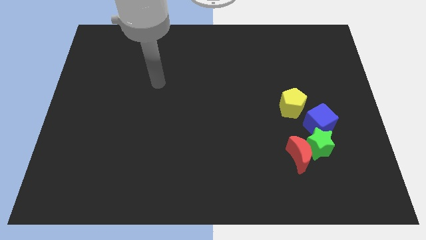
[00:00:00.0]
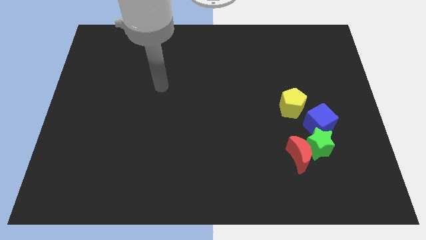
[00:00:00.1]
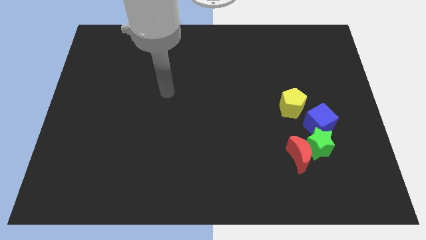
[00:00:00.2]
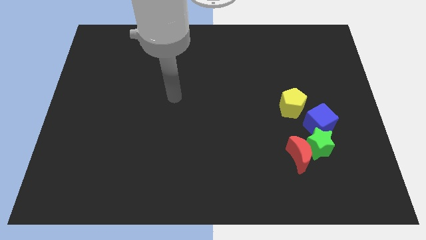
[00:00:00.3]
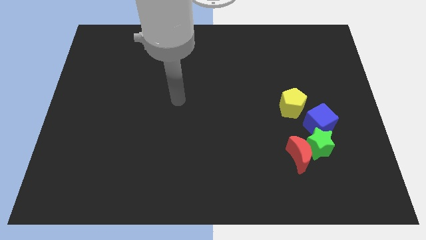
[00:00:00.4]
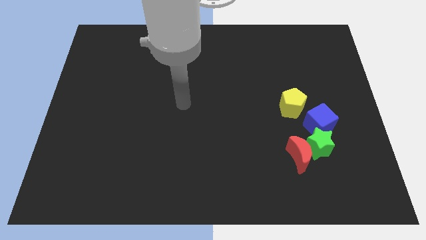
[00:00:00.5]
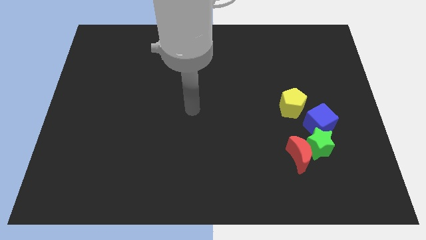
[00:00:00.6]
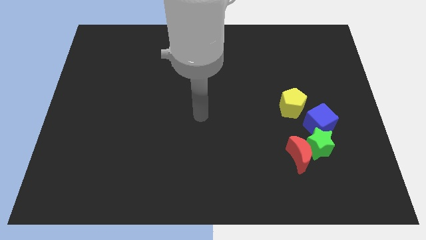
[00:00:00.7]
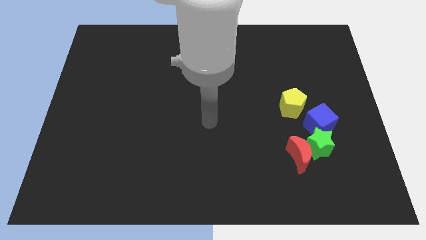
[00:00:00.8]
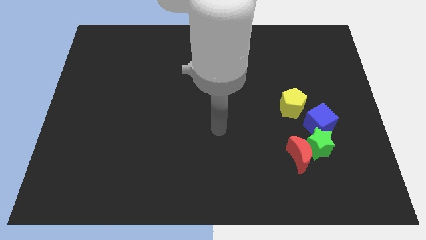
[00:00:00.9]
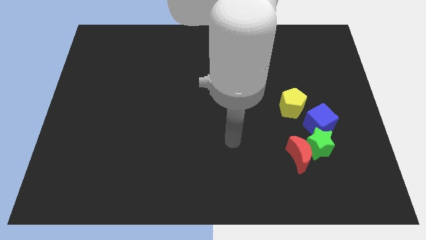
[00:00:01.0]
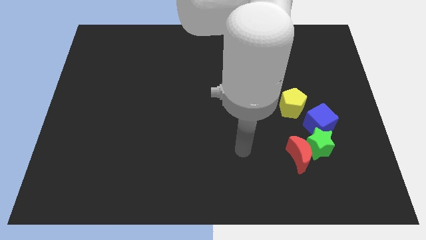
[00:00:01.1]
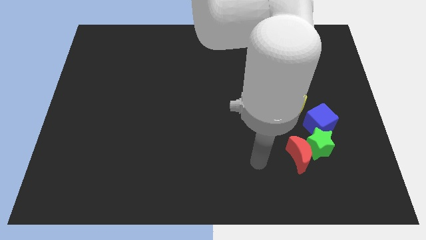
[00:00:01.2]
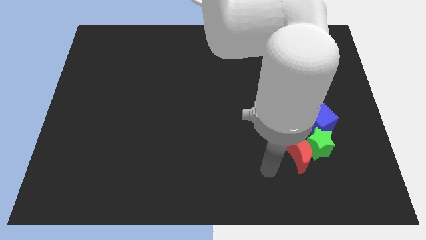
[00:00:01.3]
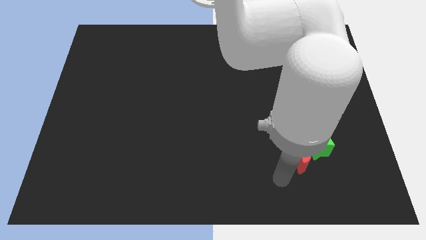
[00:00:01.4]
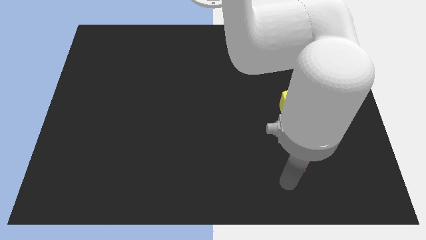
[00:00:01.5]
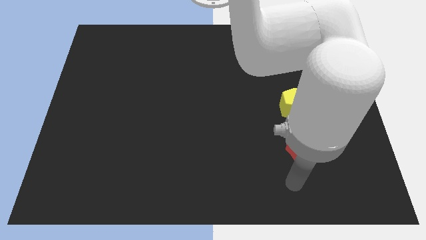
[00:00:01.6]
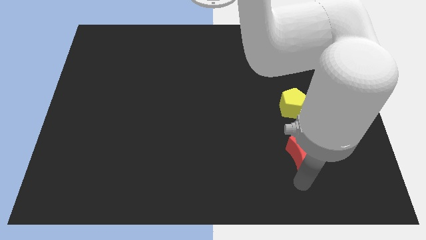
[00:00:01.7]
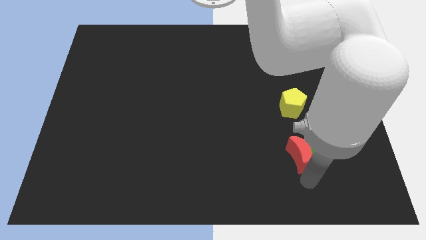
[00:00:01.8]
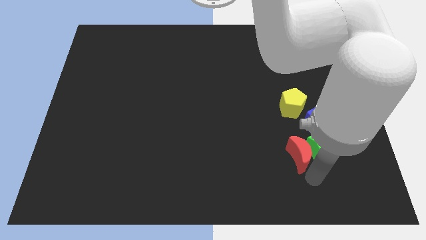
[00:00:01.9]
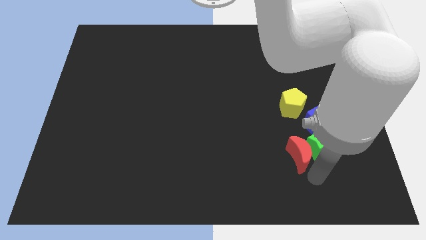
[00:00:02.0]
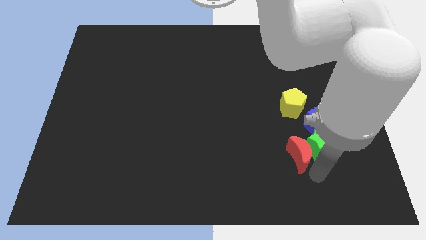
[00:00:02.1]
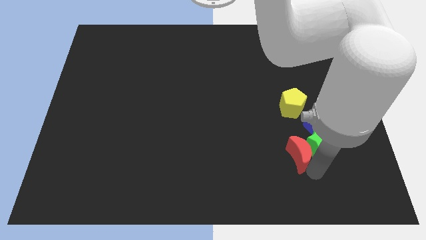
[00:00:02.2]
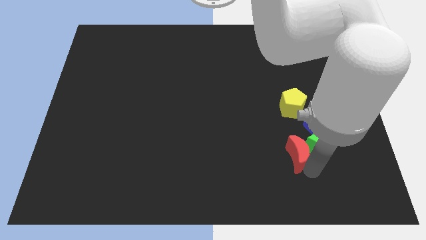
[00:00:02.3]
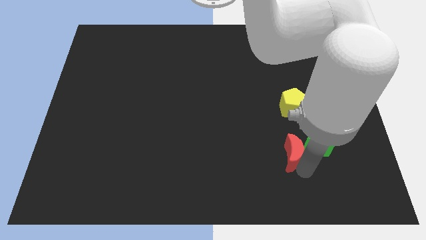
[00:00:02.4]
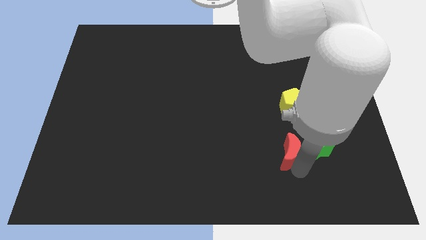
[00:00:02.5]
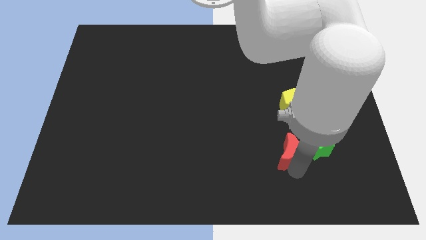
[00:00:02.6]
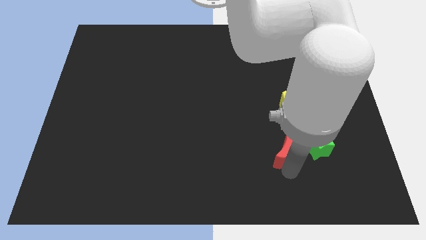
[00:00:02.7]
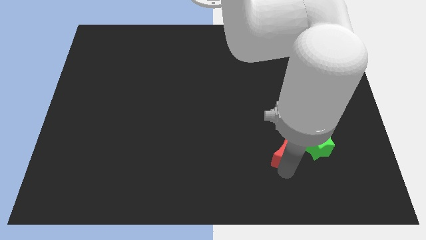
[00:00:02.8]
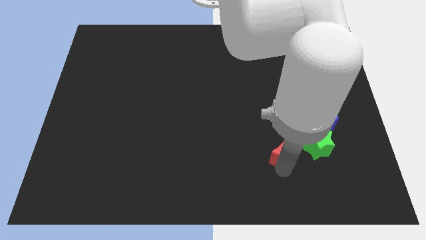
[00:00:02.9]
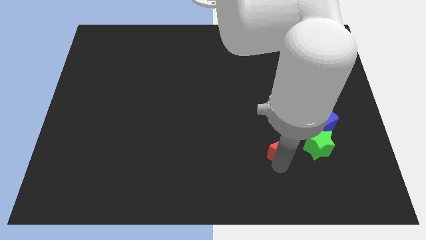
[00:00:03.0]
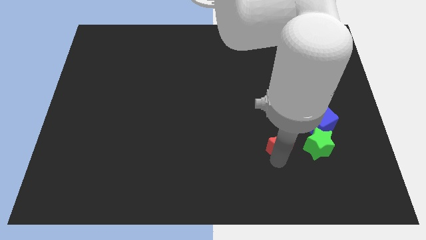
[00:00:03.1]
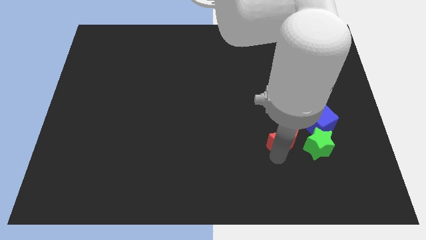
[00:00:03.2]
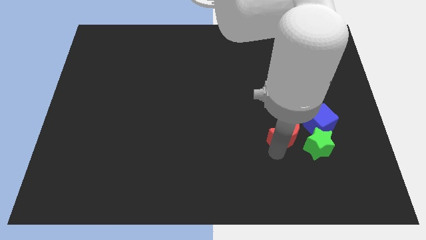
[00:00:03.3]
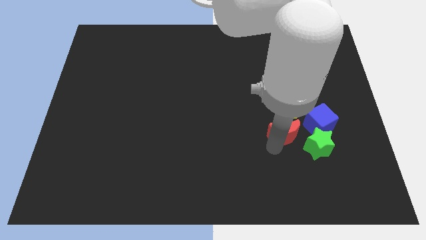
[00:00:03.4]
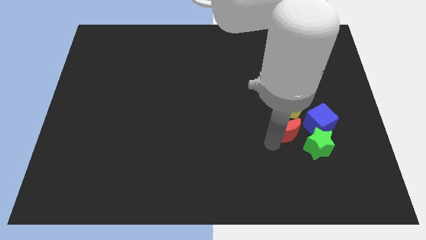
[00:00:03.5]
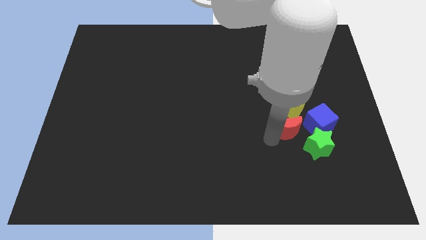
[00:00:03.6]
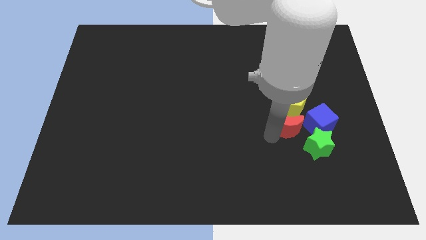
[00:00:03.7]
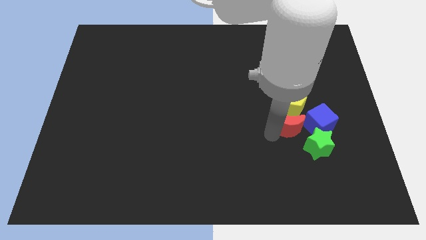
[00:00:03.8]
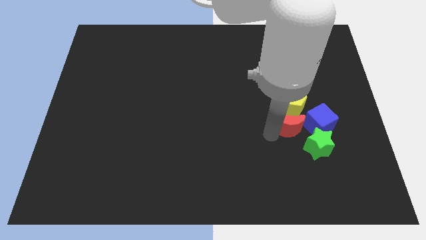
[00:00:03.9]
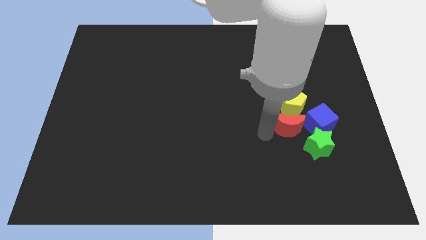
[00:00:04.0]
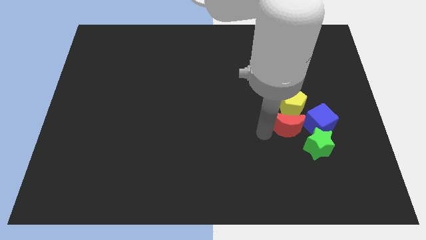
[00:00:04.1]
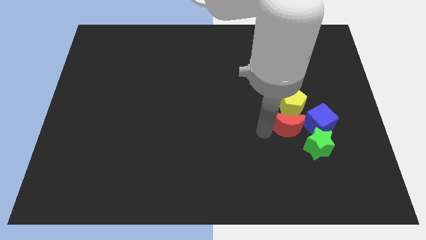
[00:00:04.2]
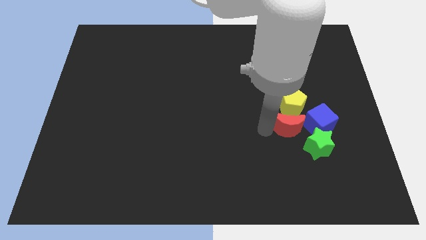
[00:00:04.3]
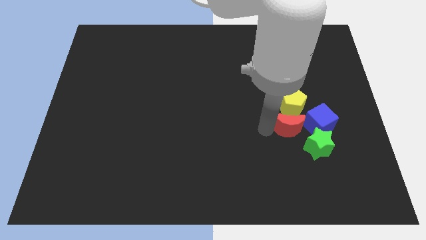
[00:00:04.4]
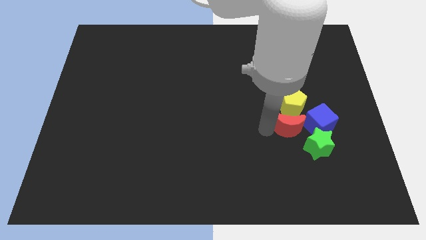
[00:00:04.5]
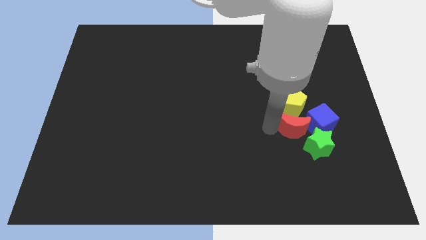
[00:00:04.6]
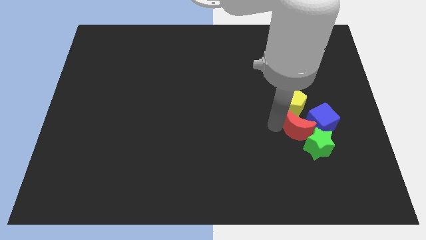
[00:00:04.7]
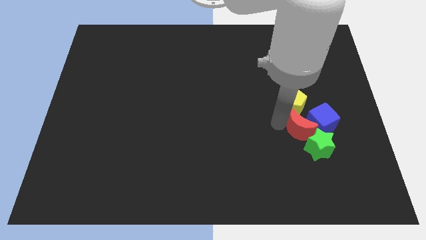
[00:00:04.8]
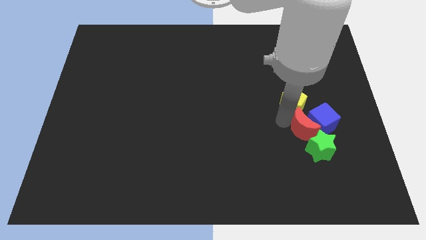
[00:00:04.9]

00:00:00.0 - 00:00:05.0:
push the red moon towards the blue block

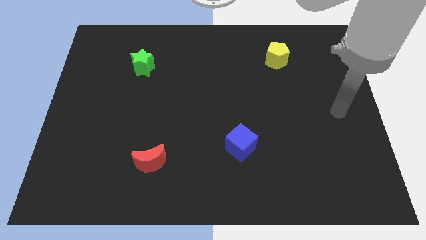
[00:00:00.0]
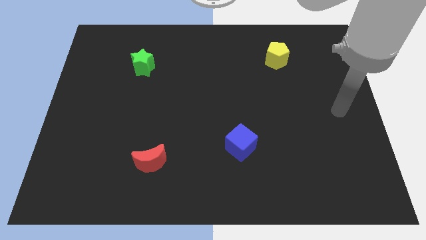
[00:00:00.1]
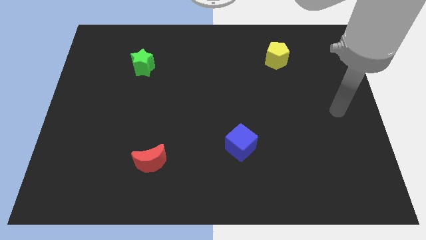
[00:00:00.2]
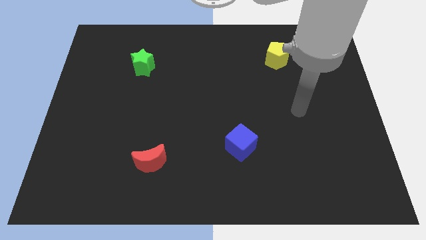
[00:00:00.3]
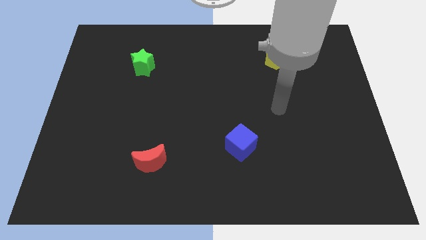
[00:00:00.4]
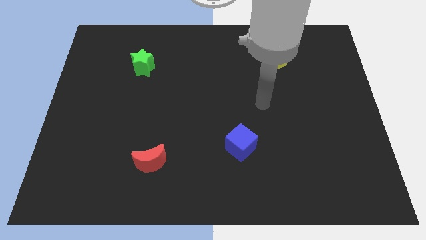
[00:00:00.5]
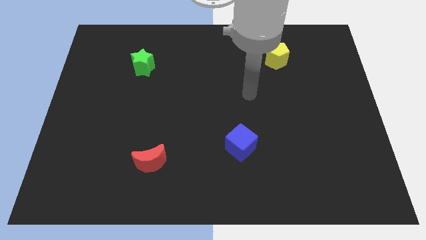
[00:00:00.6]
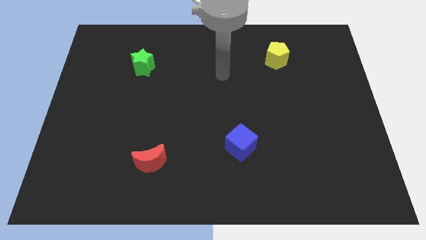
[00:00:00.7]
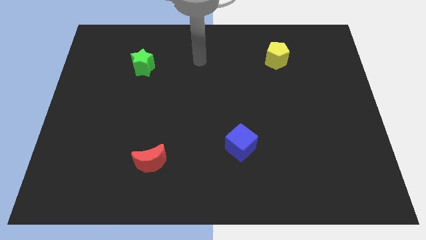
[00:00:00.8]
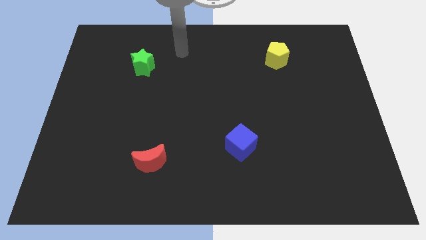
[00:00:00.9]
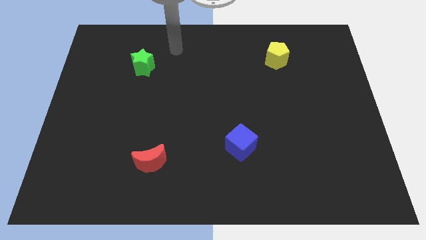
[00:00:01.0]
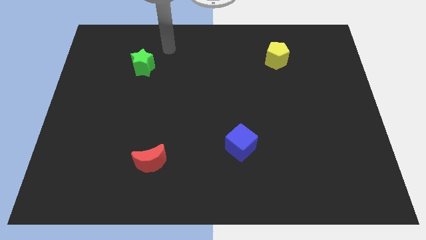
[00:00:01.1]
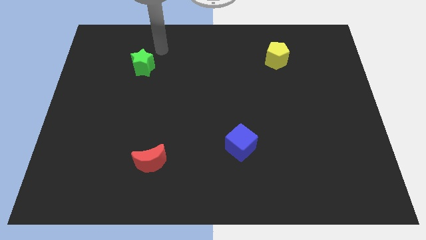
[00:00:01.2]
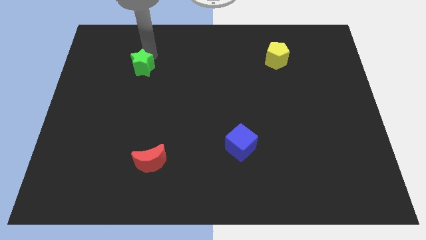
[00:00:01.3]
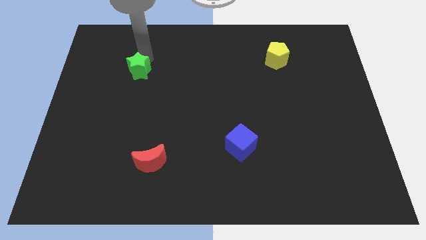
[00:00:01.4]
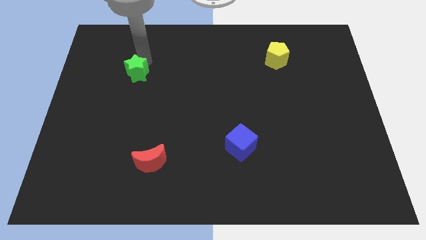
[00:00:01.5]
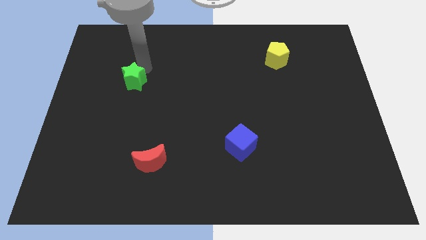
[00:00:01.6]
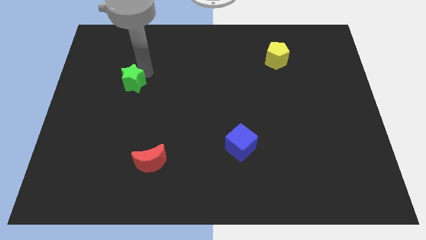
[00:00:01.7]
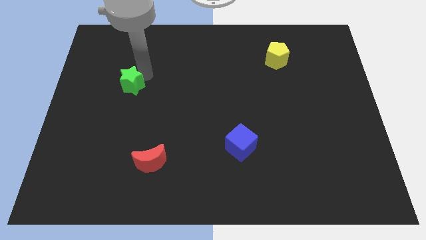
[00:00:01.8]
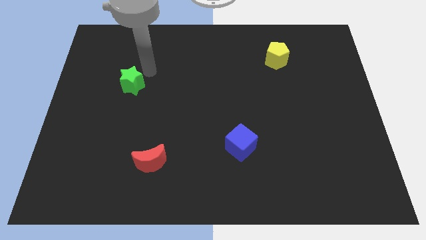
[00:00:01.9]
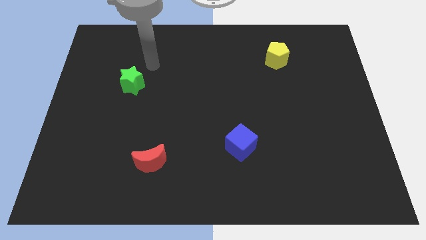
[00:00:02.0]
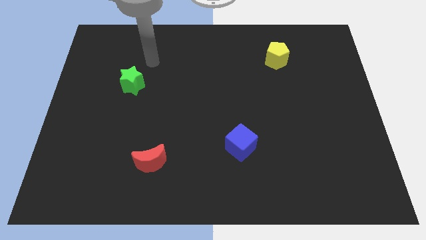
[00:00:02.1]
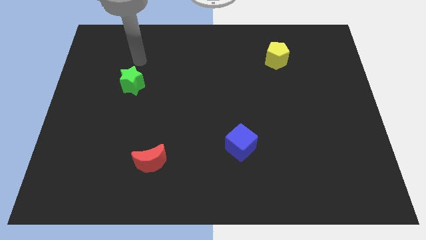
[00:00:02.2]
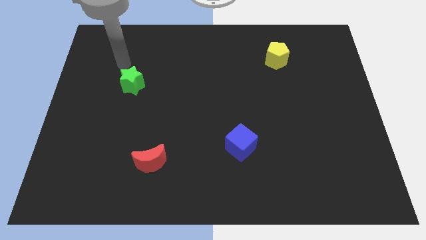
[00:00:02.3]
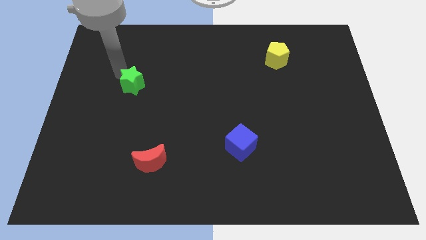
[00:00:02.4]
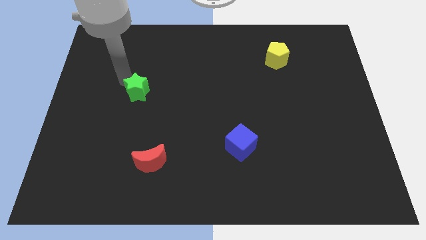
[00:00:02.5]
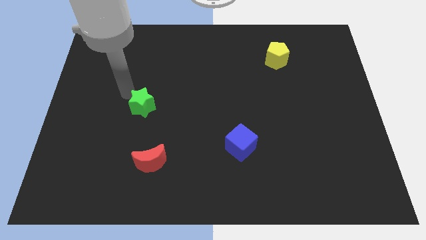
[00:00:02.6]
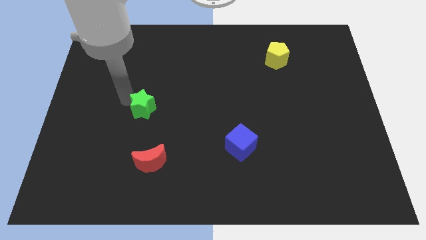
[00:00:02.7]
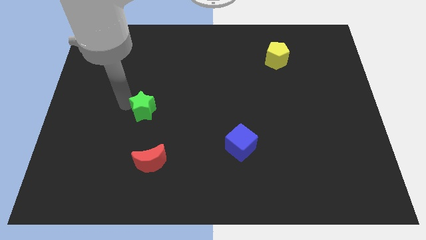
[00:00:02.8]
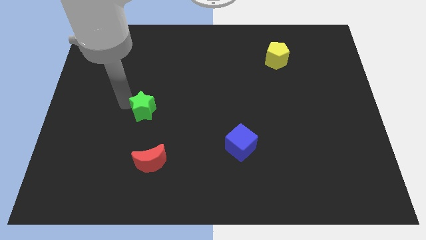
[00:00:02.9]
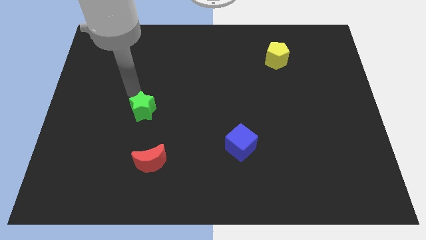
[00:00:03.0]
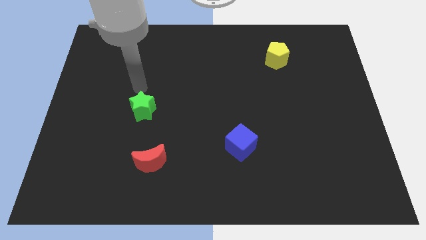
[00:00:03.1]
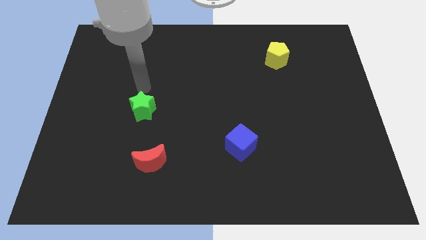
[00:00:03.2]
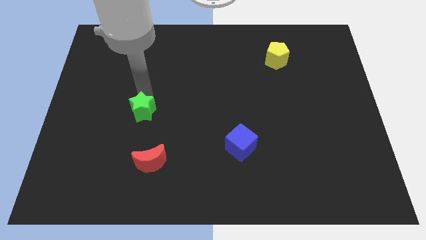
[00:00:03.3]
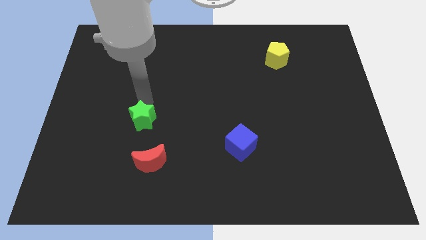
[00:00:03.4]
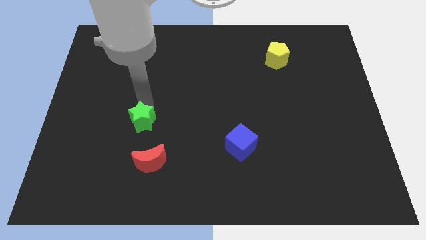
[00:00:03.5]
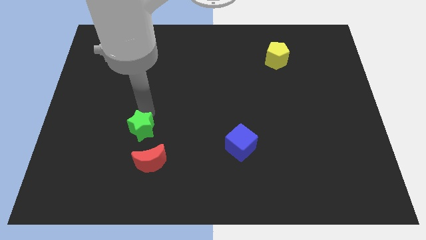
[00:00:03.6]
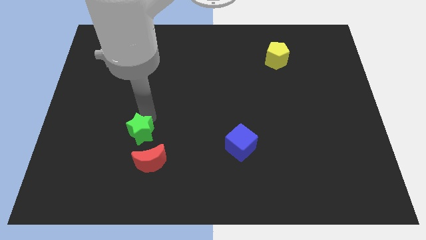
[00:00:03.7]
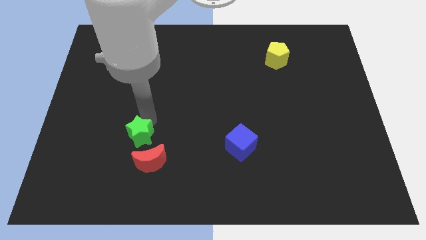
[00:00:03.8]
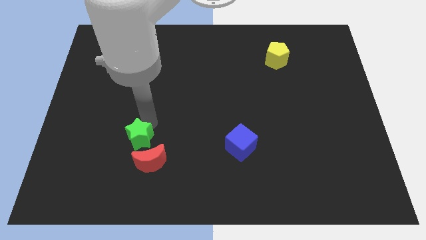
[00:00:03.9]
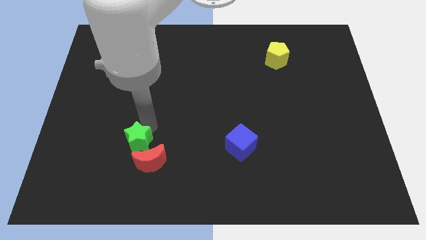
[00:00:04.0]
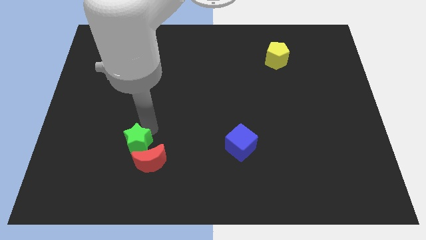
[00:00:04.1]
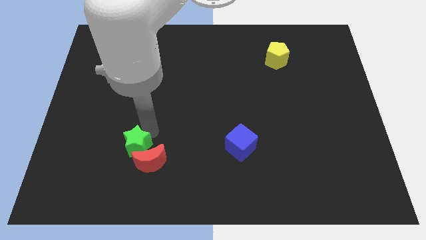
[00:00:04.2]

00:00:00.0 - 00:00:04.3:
slide the star close to the moon
